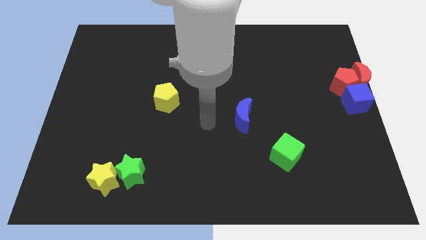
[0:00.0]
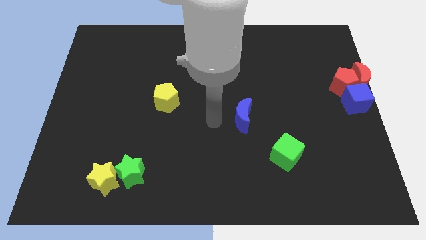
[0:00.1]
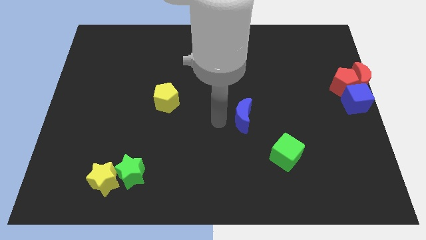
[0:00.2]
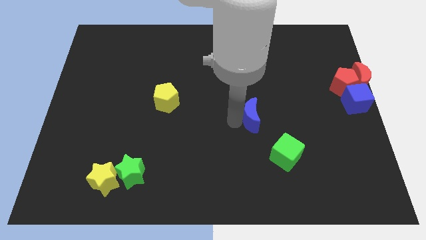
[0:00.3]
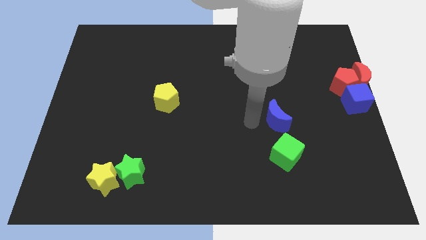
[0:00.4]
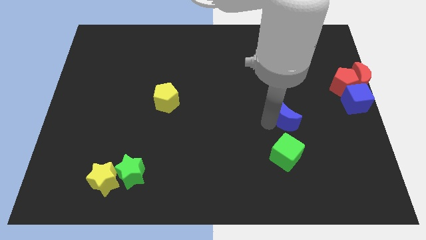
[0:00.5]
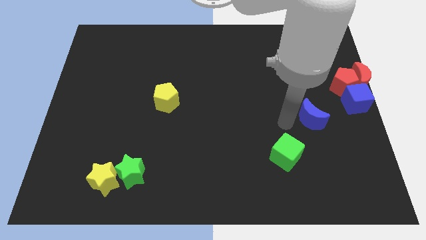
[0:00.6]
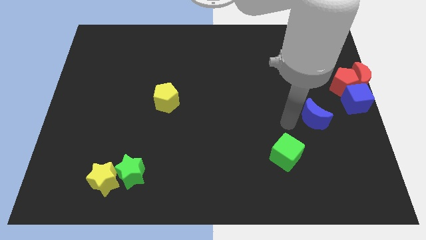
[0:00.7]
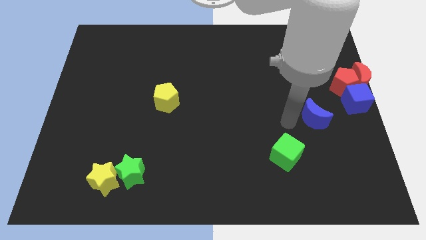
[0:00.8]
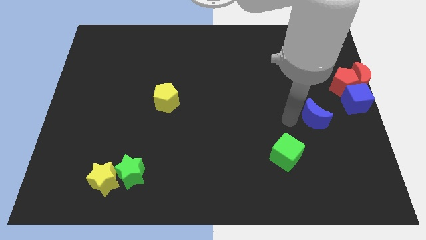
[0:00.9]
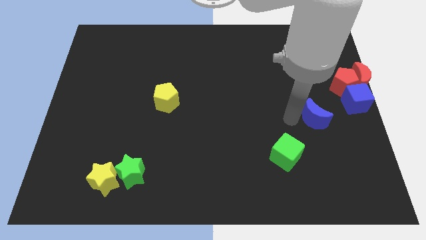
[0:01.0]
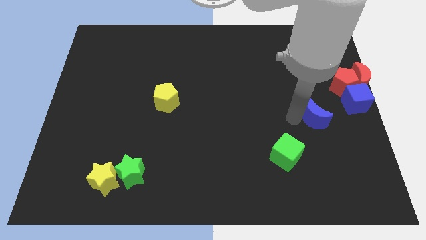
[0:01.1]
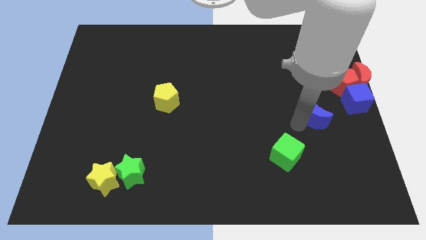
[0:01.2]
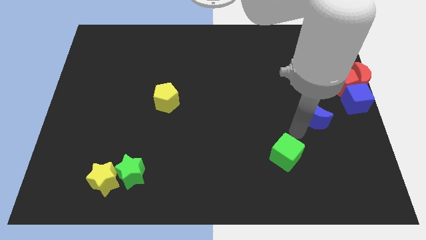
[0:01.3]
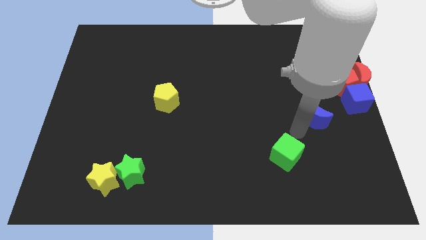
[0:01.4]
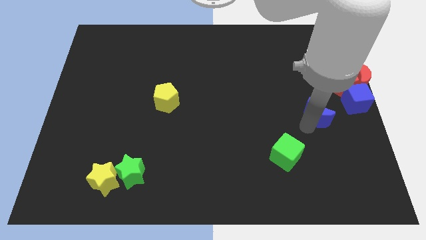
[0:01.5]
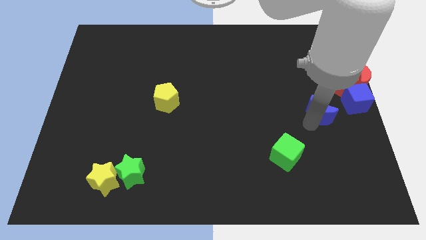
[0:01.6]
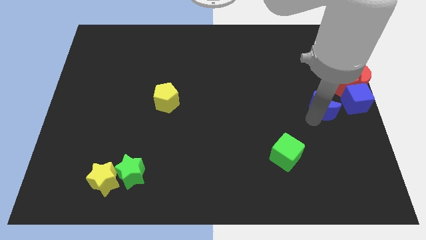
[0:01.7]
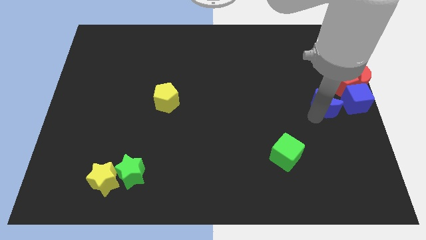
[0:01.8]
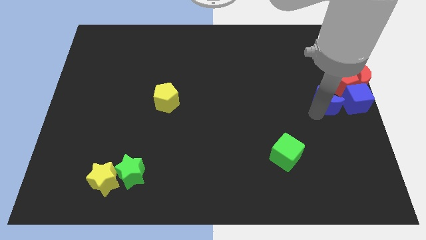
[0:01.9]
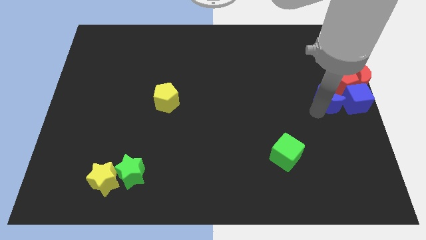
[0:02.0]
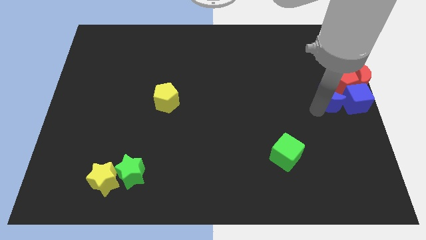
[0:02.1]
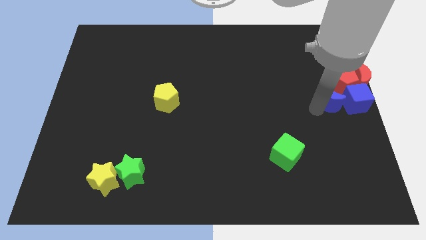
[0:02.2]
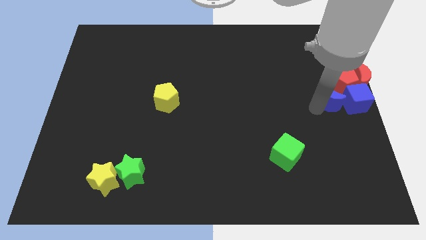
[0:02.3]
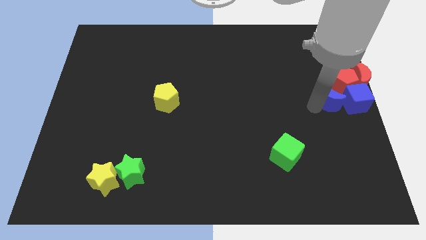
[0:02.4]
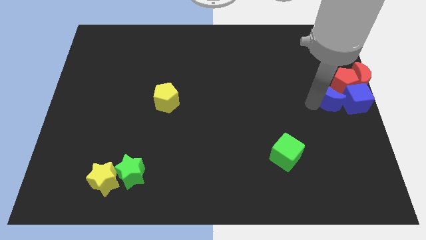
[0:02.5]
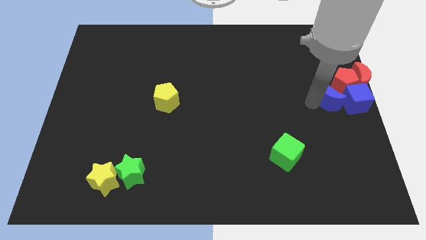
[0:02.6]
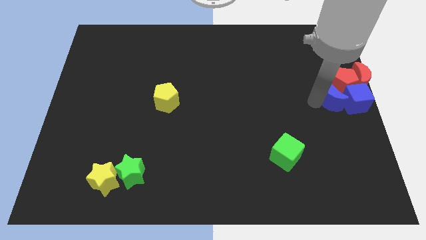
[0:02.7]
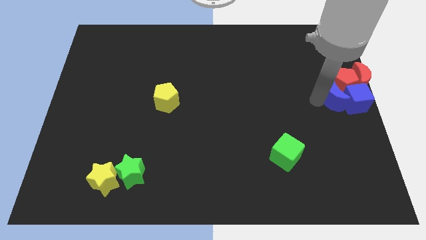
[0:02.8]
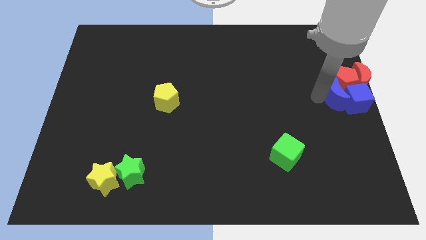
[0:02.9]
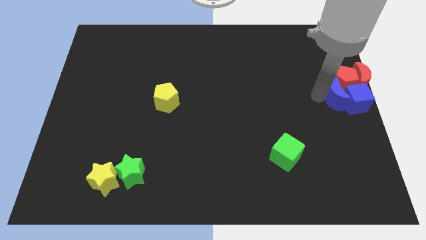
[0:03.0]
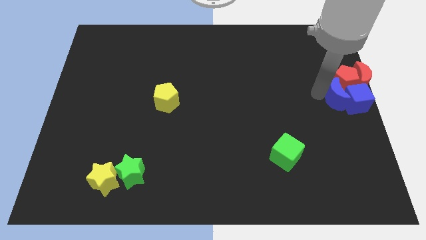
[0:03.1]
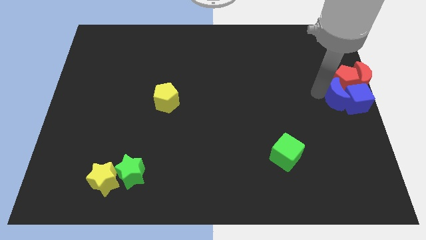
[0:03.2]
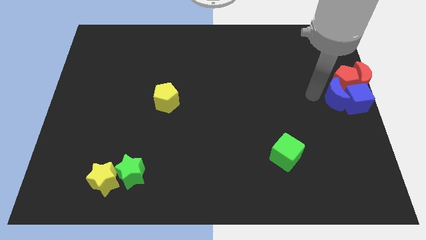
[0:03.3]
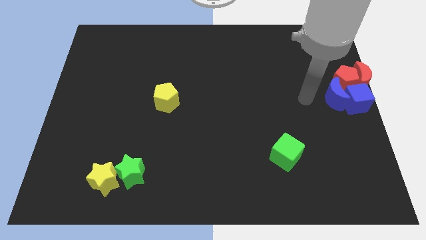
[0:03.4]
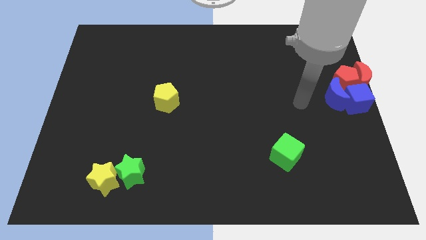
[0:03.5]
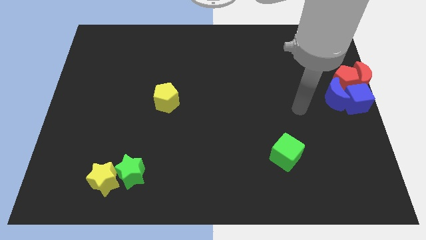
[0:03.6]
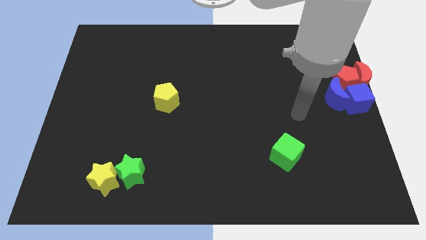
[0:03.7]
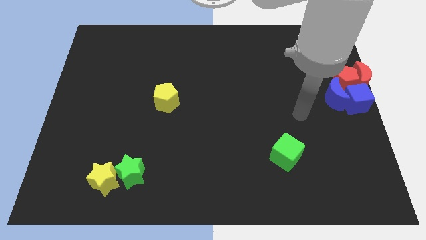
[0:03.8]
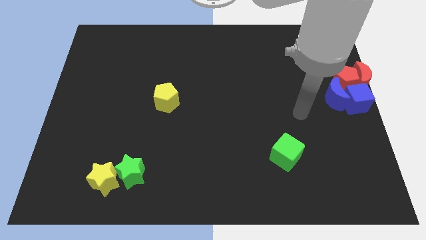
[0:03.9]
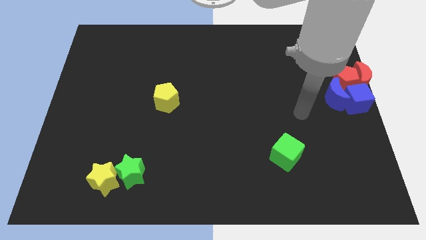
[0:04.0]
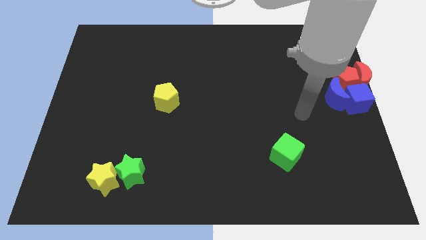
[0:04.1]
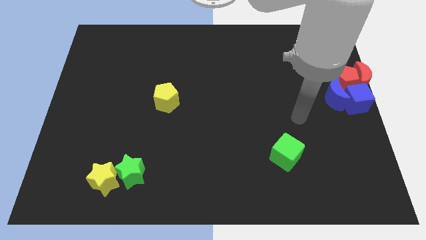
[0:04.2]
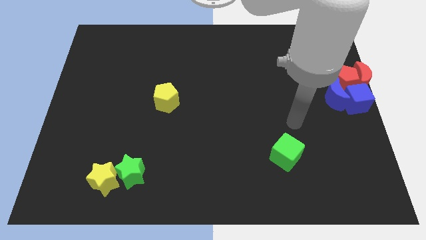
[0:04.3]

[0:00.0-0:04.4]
push the blue moon to the group of objects

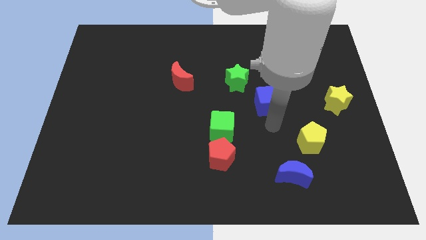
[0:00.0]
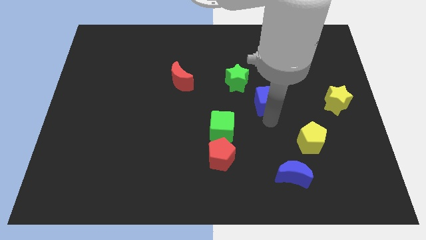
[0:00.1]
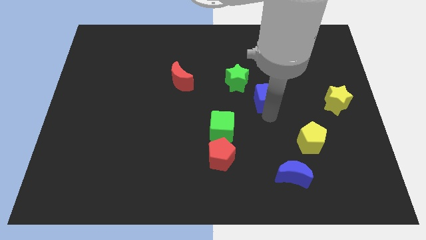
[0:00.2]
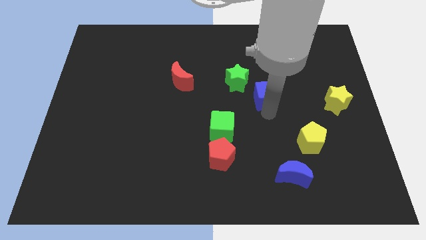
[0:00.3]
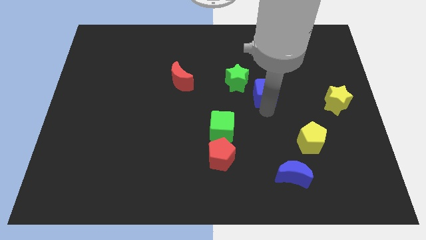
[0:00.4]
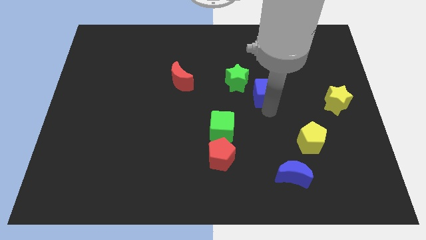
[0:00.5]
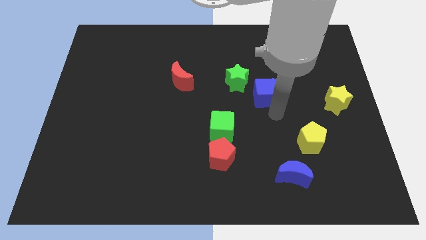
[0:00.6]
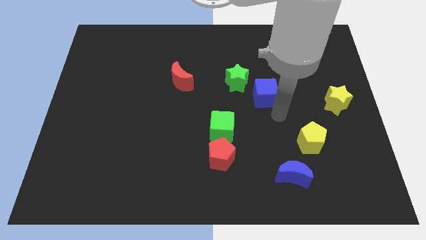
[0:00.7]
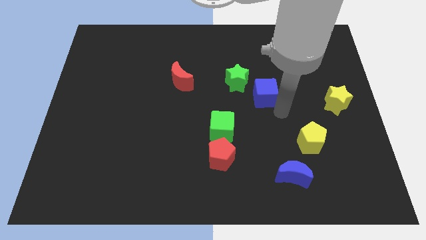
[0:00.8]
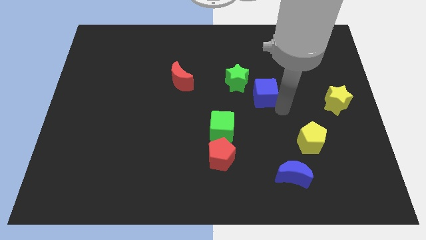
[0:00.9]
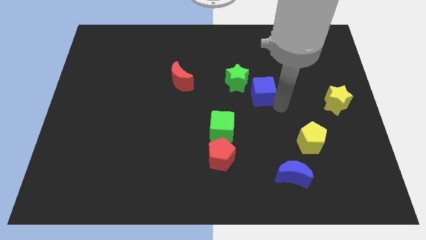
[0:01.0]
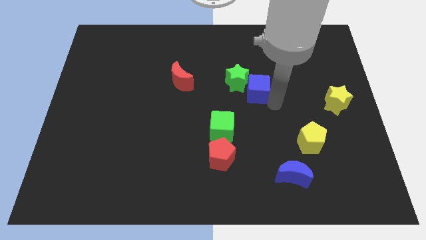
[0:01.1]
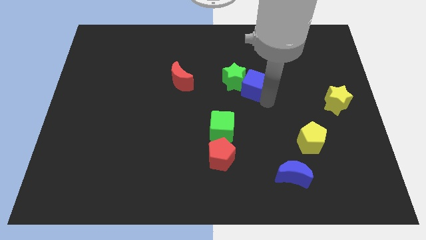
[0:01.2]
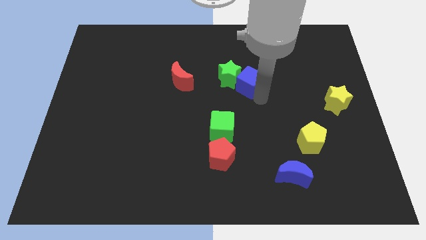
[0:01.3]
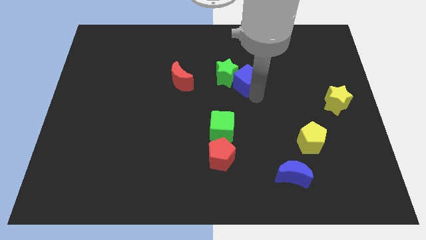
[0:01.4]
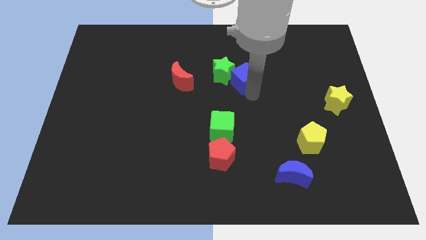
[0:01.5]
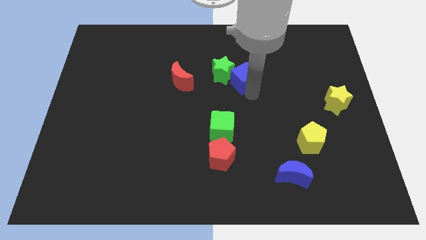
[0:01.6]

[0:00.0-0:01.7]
move the blue cube into the green star

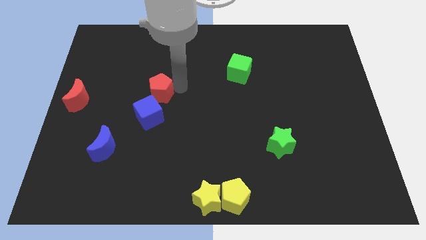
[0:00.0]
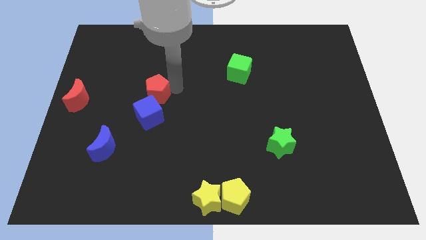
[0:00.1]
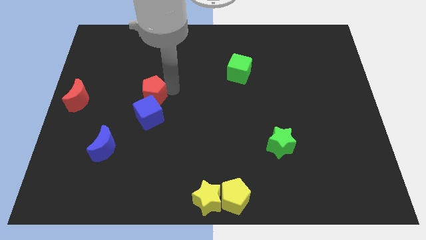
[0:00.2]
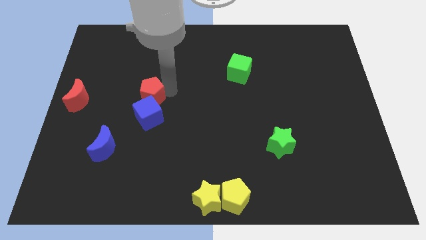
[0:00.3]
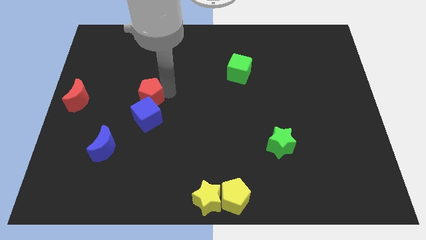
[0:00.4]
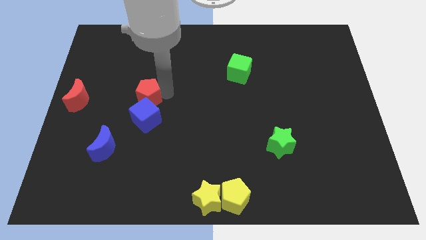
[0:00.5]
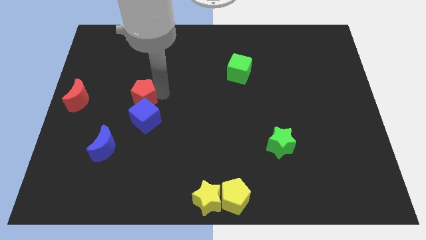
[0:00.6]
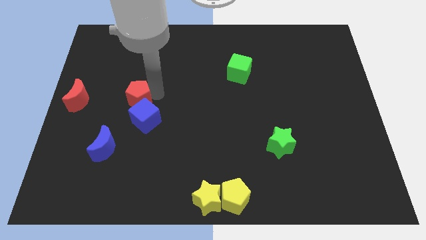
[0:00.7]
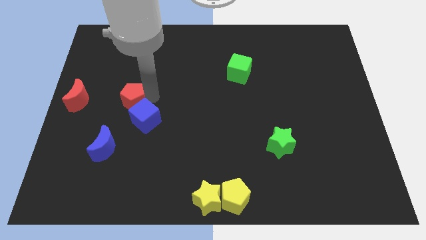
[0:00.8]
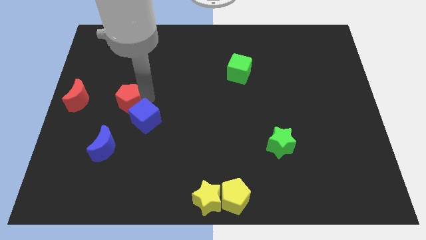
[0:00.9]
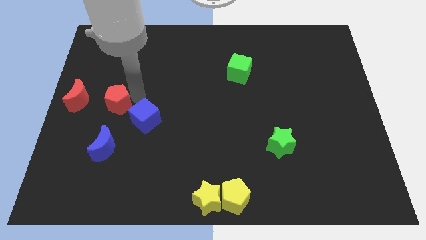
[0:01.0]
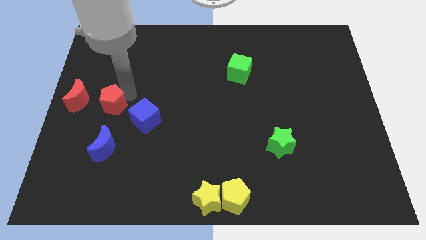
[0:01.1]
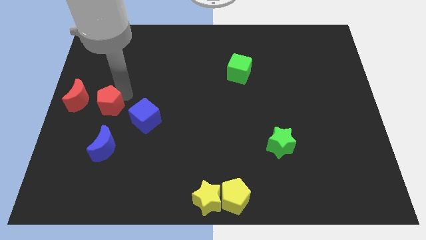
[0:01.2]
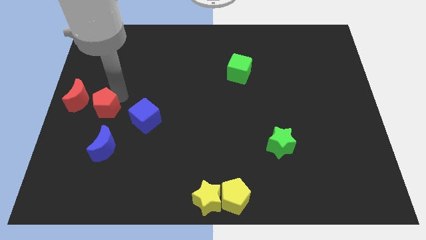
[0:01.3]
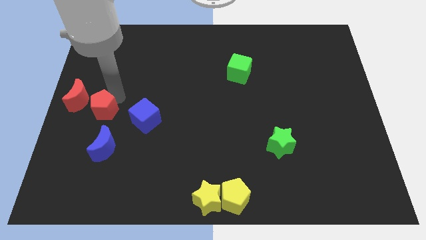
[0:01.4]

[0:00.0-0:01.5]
push the red pentagon towards the red moon

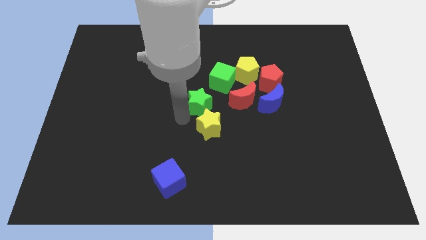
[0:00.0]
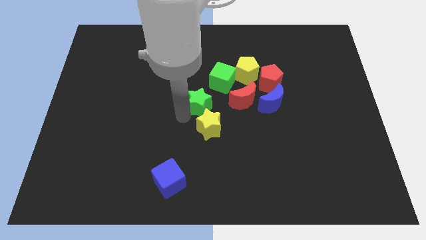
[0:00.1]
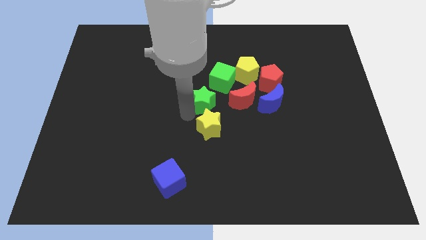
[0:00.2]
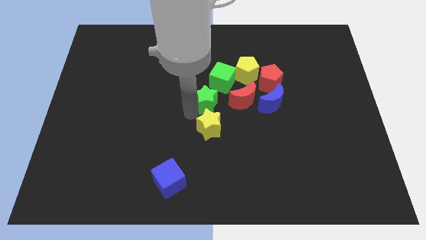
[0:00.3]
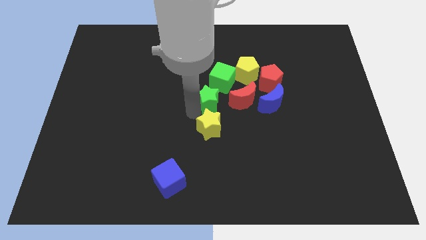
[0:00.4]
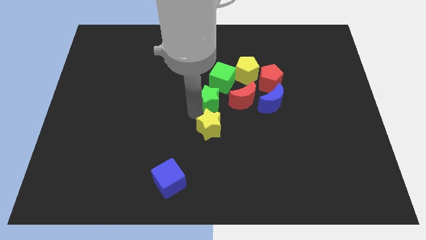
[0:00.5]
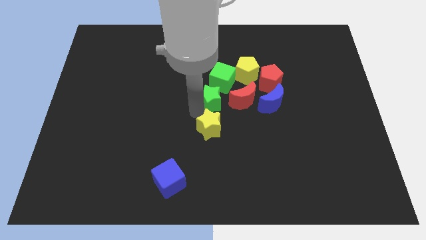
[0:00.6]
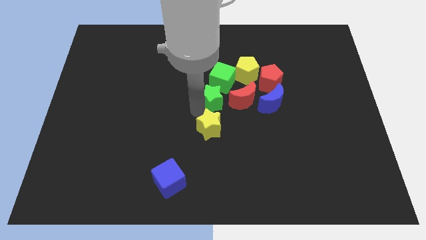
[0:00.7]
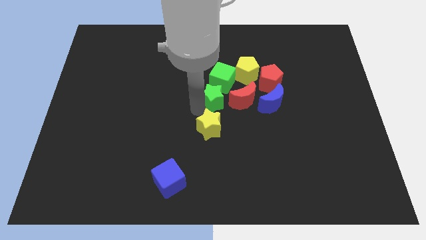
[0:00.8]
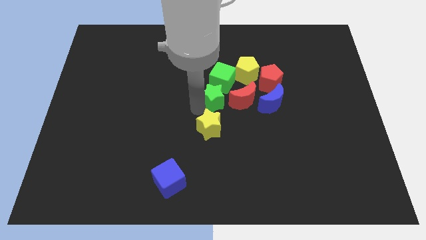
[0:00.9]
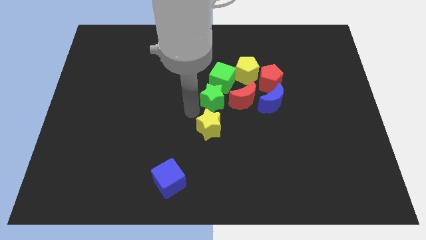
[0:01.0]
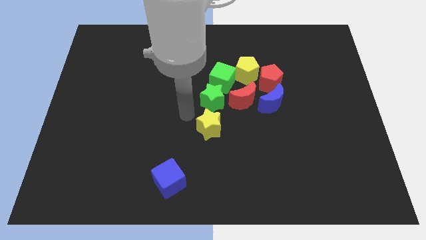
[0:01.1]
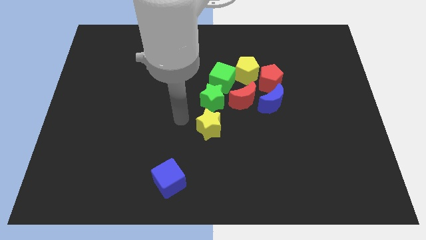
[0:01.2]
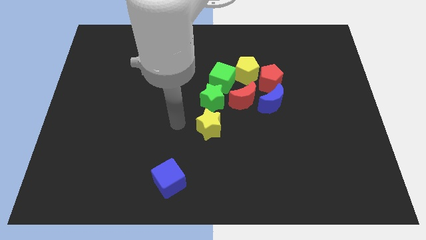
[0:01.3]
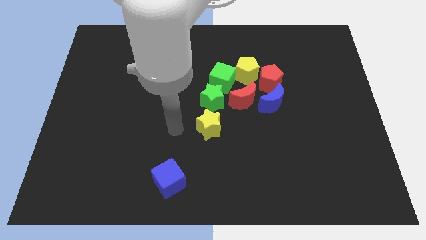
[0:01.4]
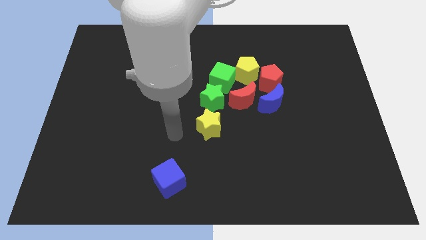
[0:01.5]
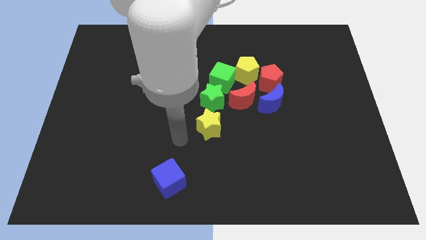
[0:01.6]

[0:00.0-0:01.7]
push the green star into the green cube
